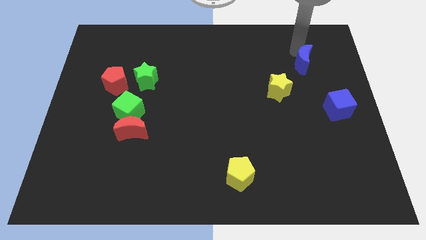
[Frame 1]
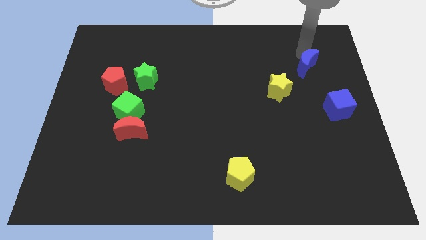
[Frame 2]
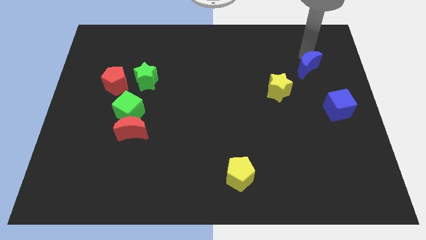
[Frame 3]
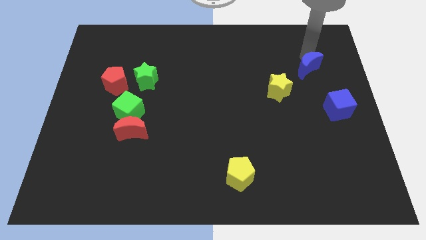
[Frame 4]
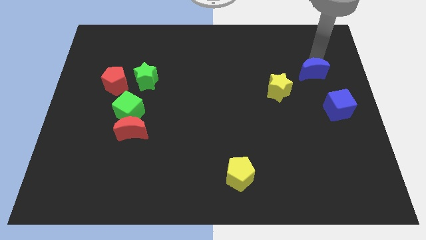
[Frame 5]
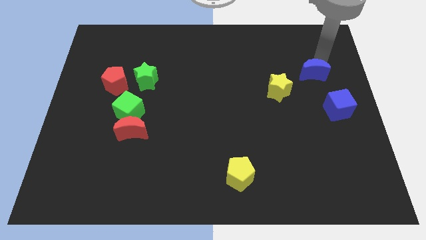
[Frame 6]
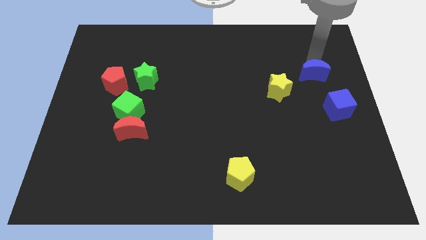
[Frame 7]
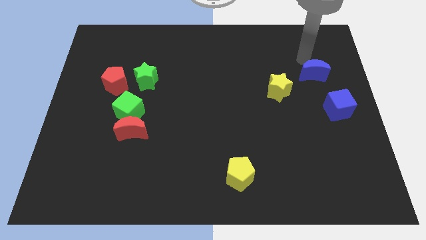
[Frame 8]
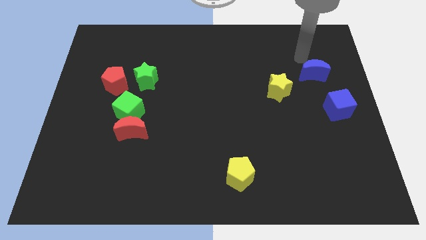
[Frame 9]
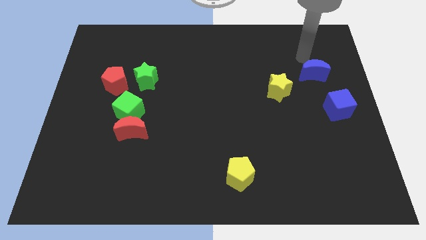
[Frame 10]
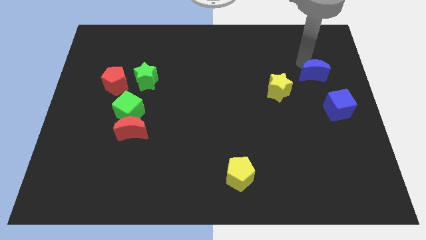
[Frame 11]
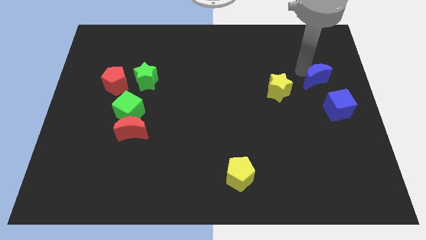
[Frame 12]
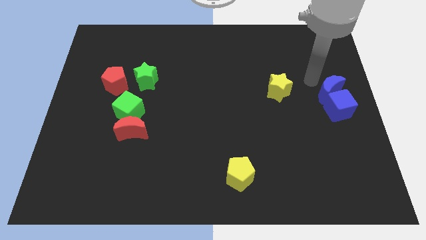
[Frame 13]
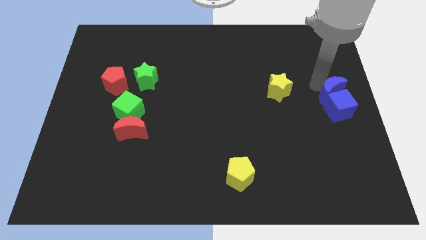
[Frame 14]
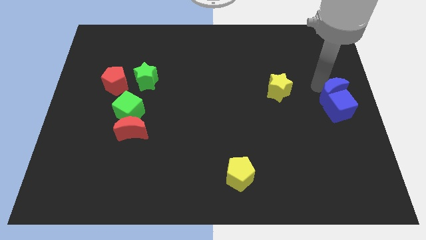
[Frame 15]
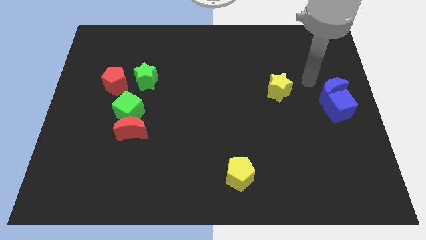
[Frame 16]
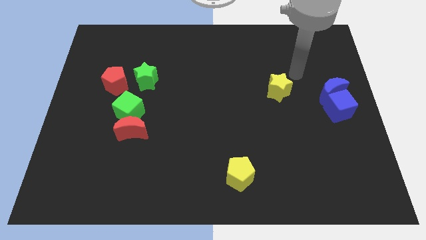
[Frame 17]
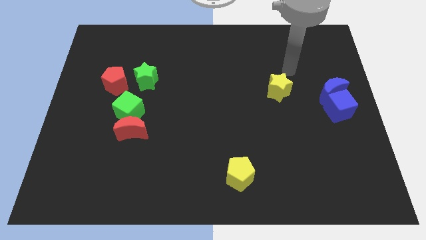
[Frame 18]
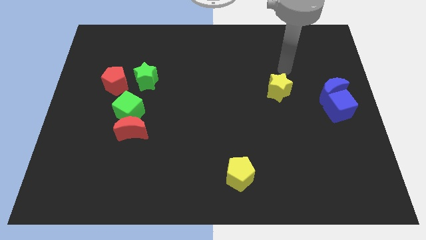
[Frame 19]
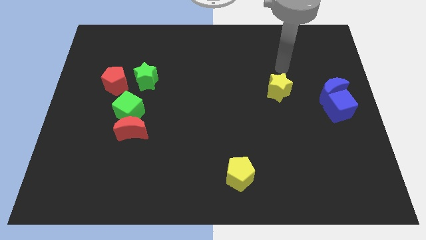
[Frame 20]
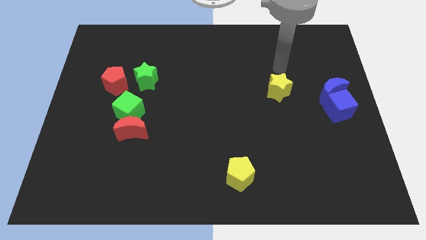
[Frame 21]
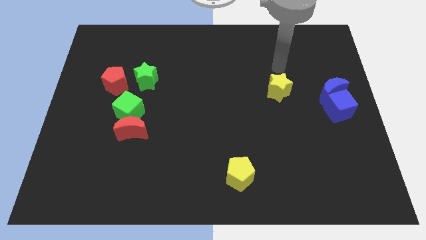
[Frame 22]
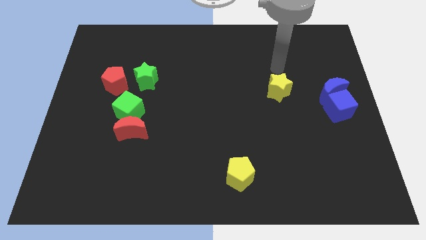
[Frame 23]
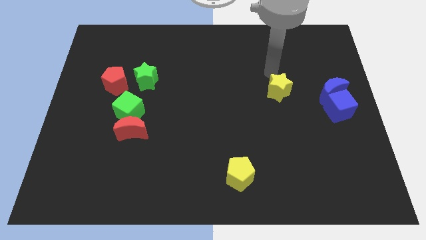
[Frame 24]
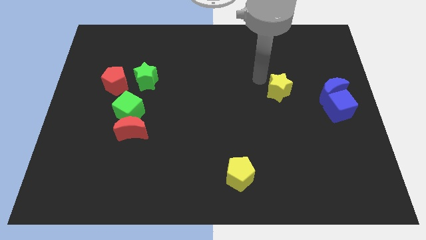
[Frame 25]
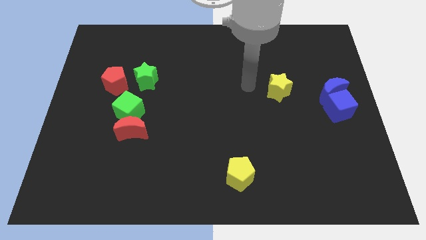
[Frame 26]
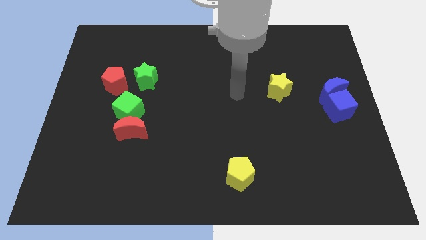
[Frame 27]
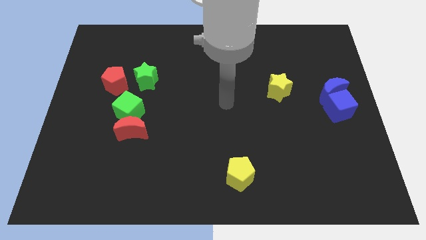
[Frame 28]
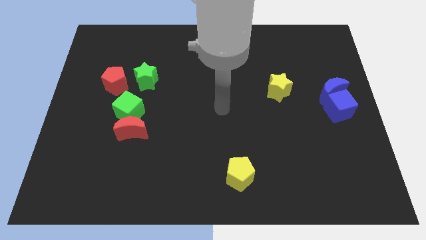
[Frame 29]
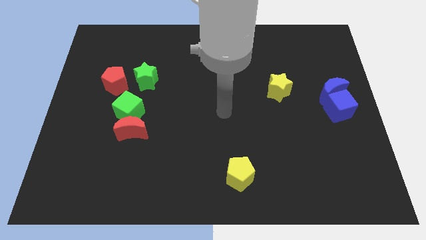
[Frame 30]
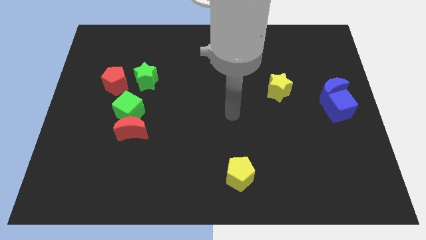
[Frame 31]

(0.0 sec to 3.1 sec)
place the blue moon at the top of the blue cube

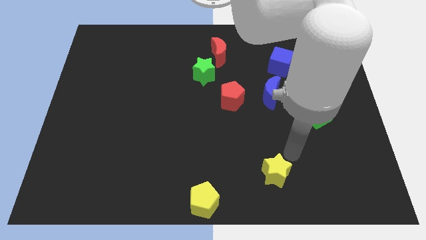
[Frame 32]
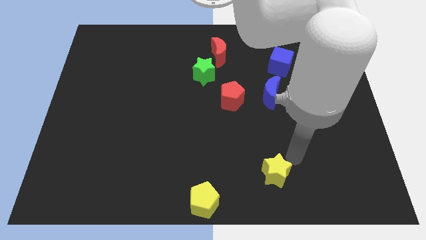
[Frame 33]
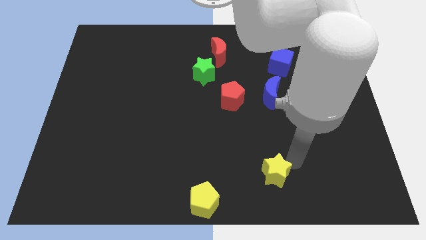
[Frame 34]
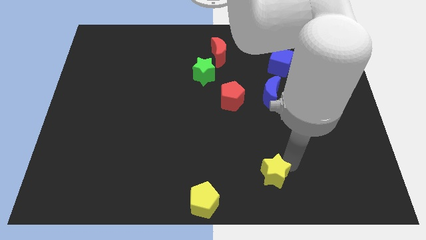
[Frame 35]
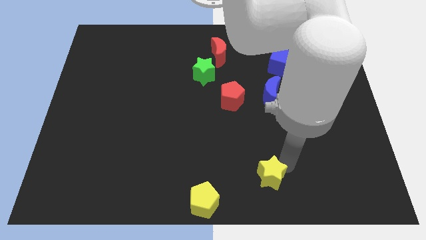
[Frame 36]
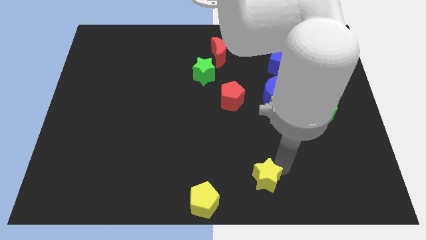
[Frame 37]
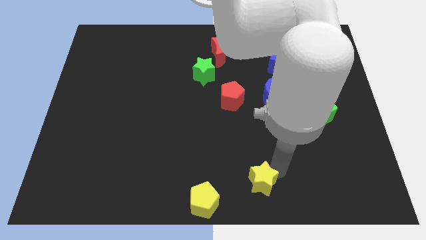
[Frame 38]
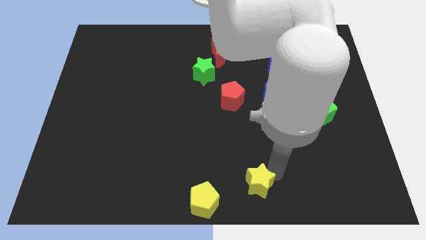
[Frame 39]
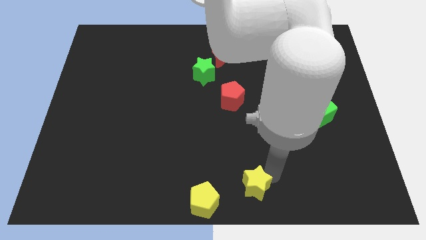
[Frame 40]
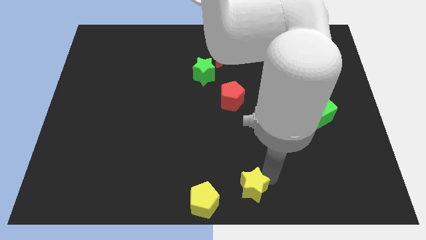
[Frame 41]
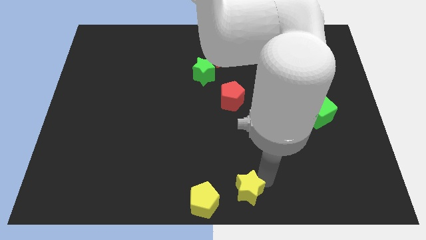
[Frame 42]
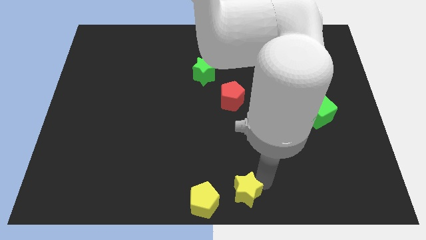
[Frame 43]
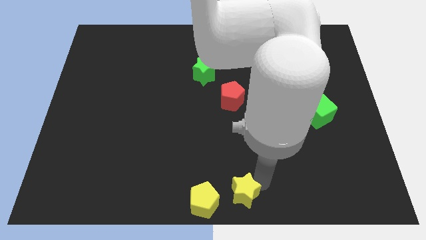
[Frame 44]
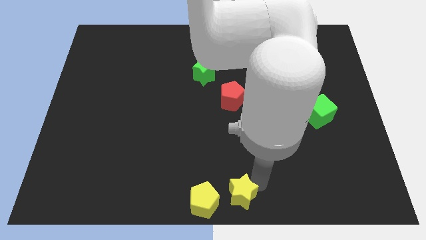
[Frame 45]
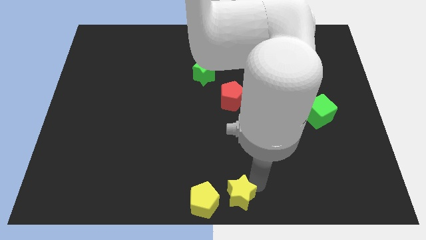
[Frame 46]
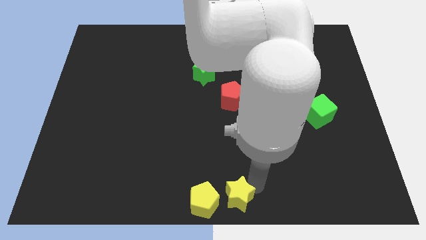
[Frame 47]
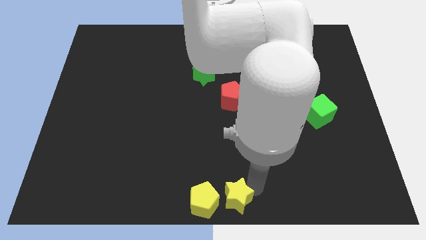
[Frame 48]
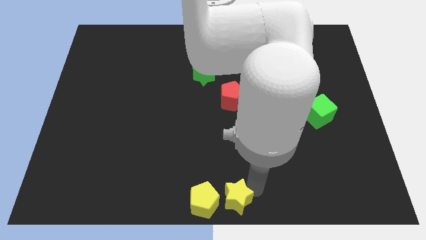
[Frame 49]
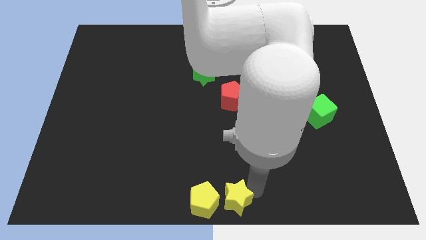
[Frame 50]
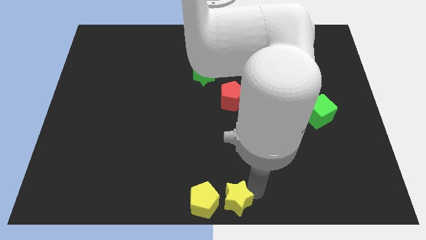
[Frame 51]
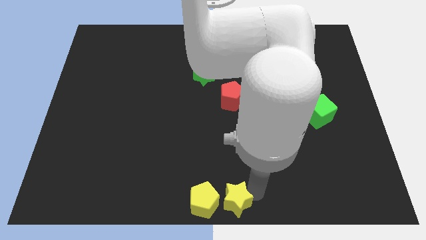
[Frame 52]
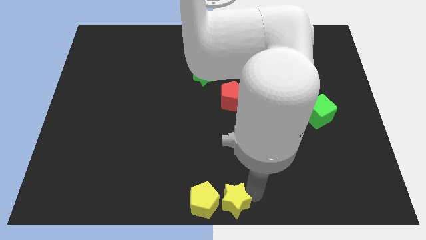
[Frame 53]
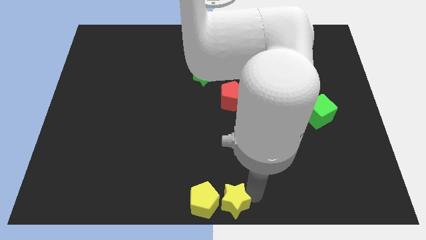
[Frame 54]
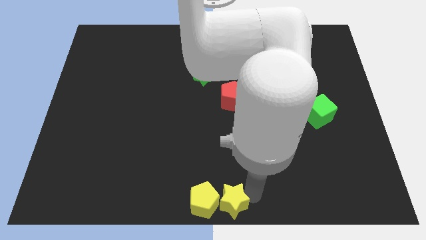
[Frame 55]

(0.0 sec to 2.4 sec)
place the yellow star close to the yellow pentagon

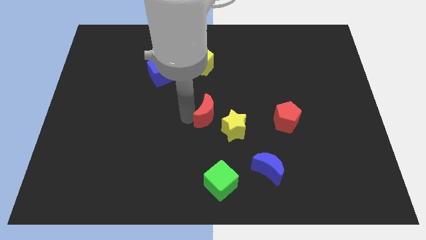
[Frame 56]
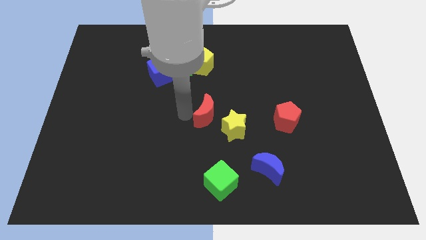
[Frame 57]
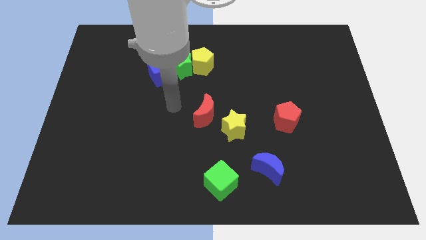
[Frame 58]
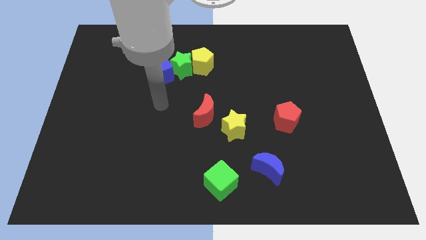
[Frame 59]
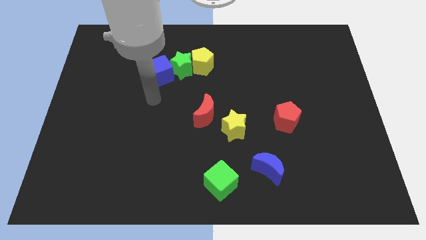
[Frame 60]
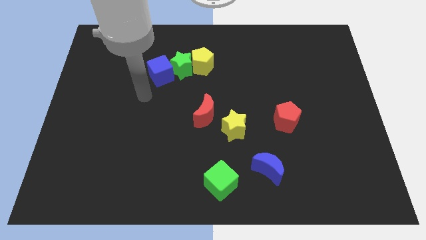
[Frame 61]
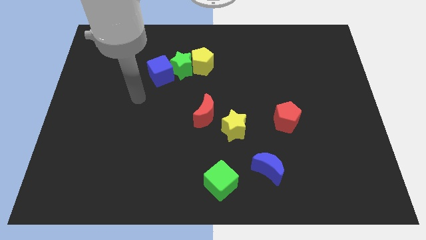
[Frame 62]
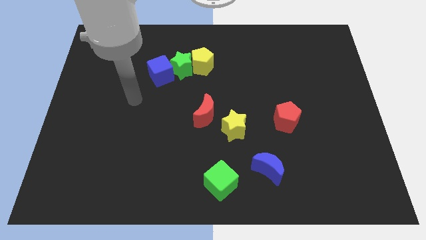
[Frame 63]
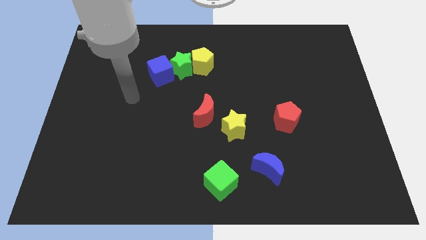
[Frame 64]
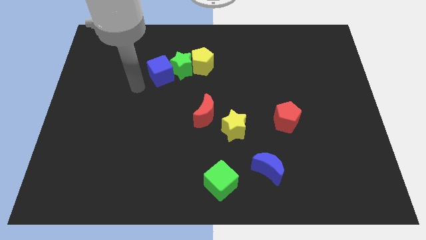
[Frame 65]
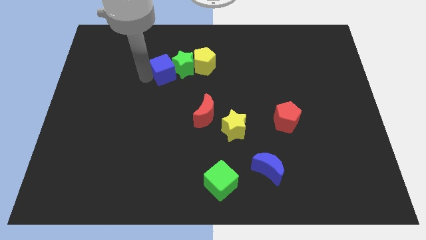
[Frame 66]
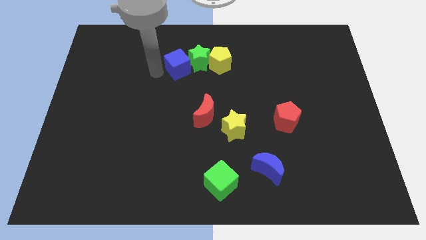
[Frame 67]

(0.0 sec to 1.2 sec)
move your arm towards the blue cube

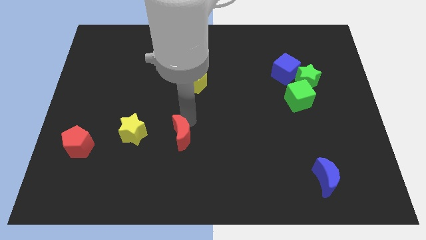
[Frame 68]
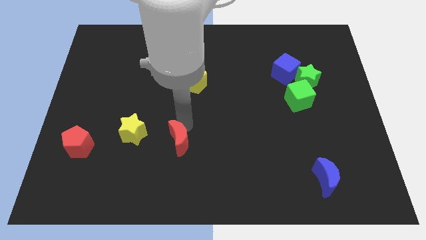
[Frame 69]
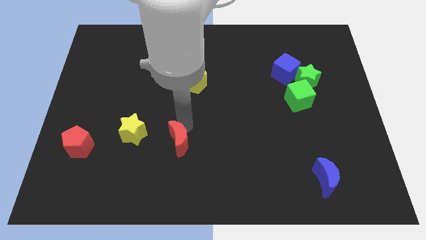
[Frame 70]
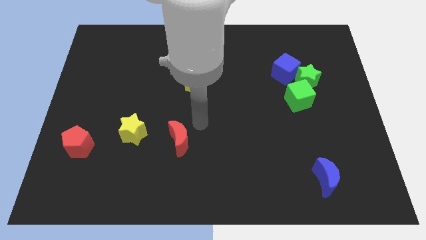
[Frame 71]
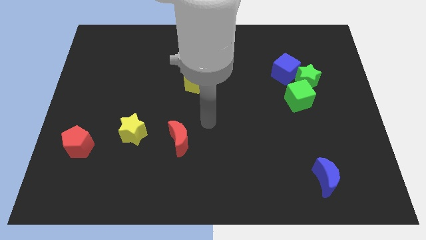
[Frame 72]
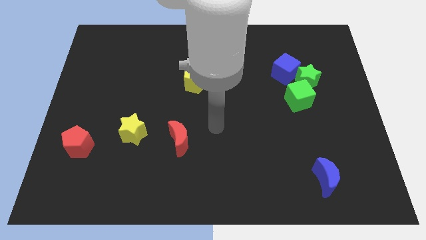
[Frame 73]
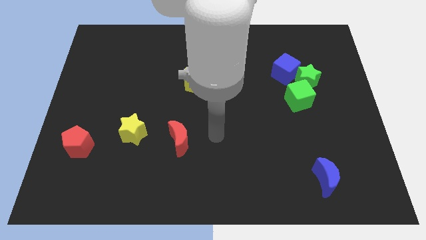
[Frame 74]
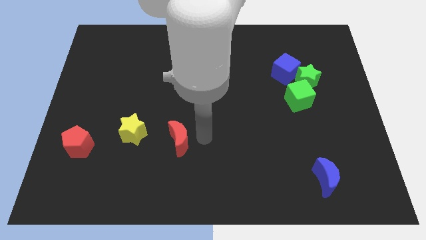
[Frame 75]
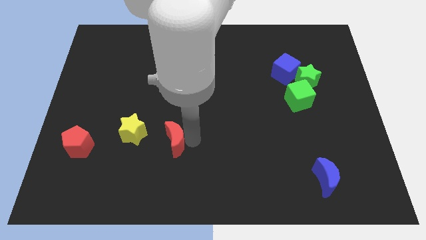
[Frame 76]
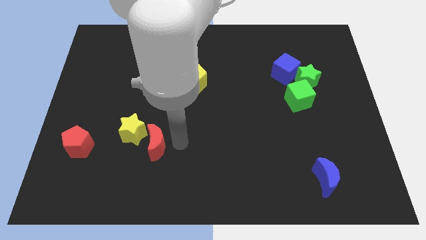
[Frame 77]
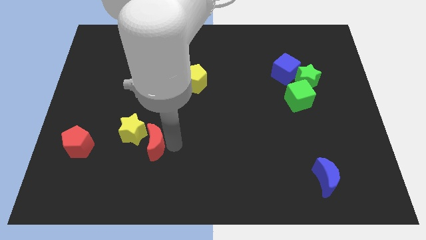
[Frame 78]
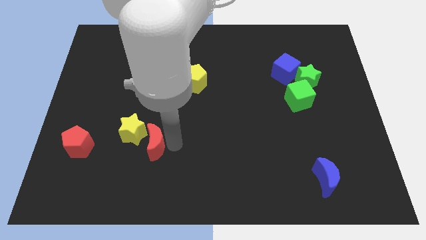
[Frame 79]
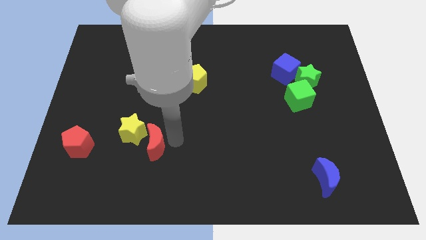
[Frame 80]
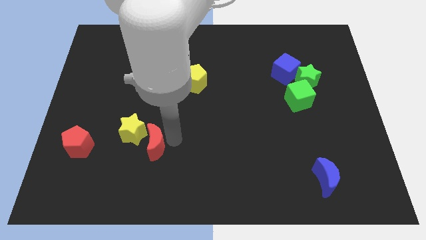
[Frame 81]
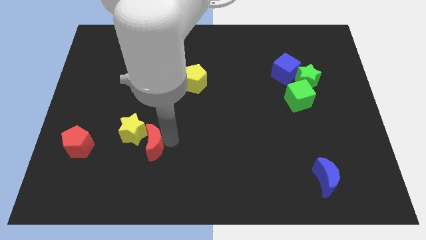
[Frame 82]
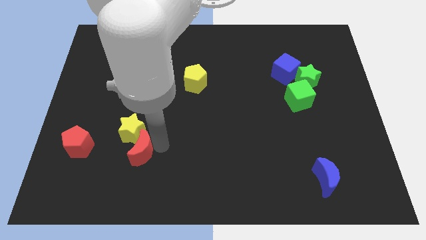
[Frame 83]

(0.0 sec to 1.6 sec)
slide the red moon into the yellow star

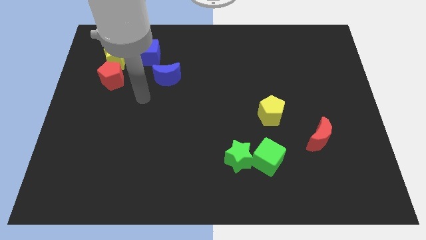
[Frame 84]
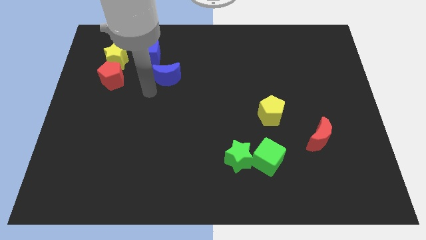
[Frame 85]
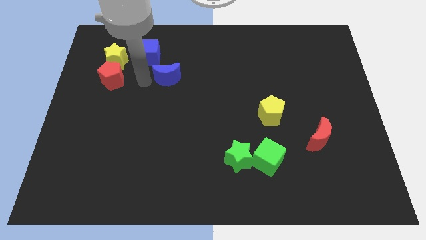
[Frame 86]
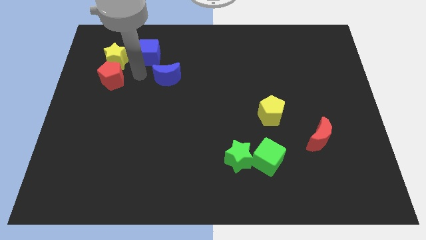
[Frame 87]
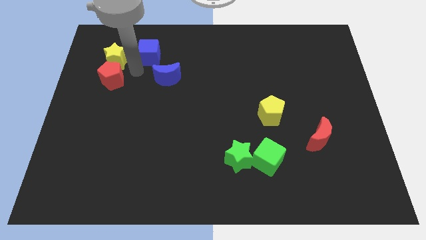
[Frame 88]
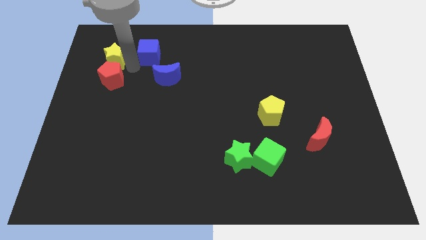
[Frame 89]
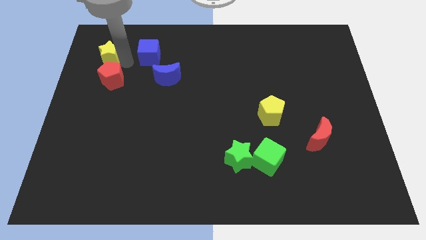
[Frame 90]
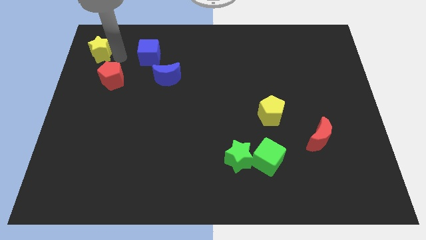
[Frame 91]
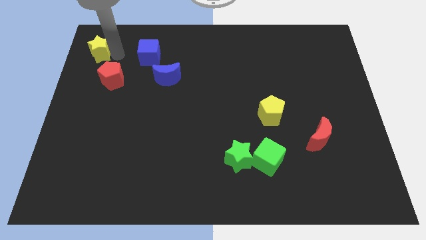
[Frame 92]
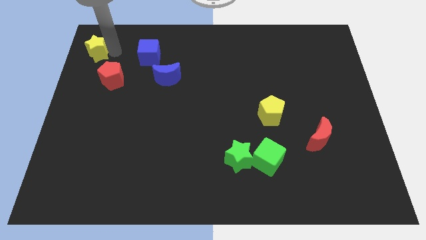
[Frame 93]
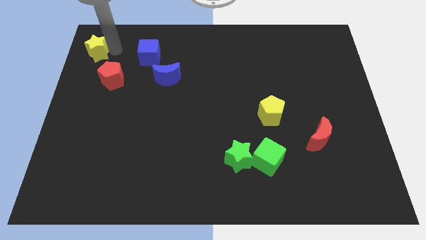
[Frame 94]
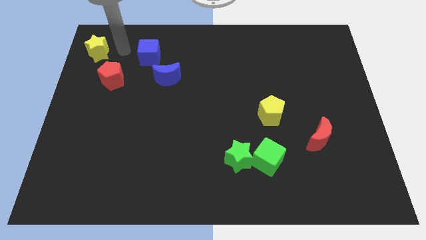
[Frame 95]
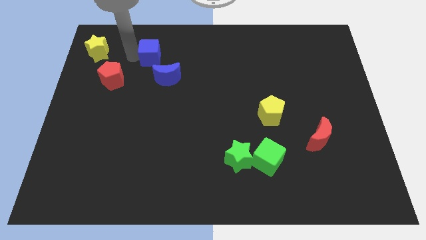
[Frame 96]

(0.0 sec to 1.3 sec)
push yellow star to the top left corner of the board
